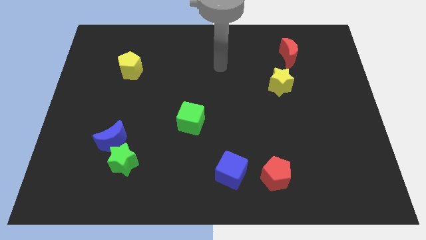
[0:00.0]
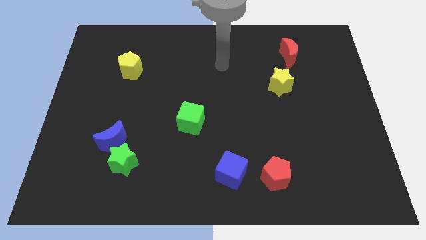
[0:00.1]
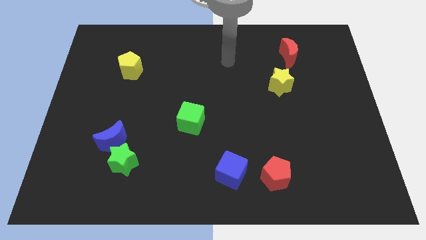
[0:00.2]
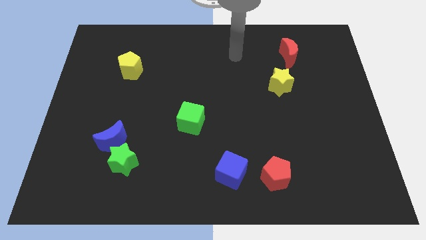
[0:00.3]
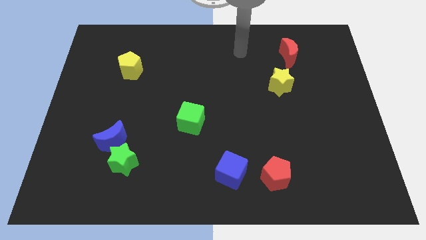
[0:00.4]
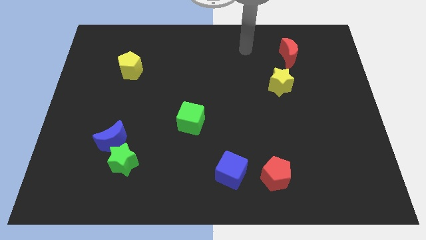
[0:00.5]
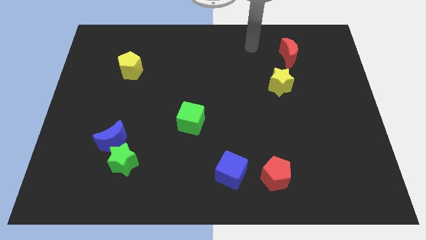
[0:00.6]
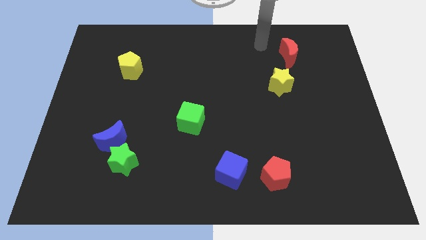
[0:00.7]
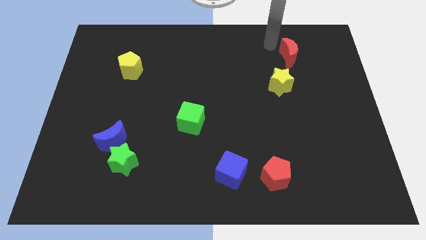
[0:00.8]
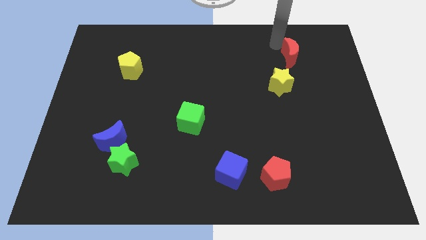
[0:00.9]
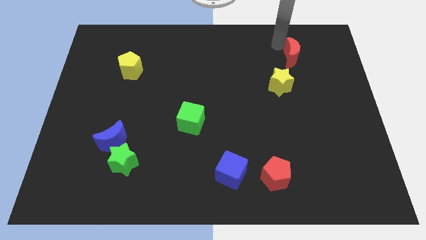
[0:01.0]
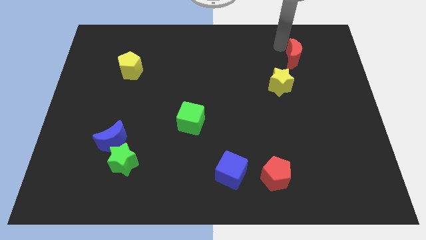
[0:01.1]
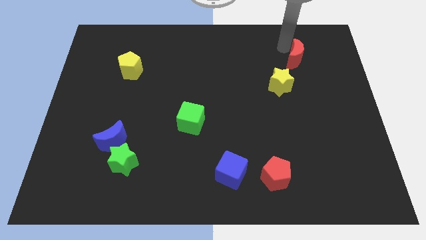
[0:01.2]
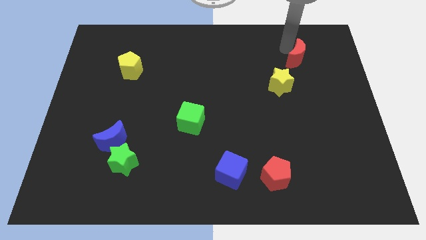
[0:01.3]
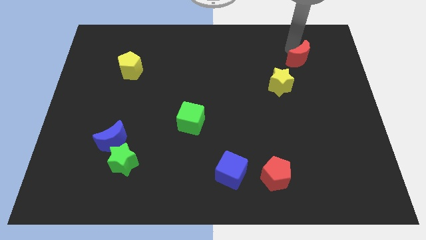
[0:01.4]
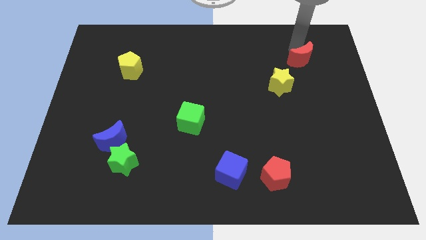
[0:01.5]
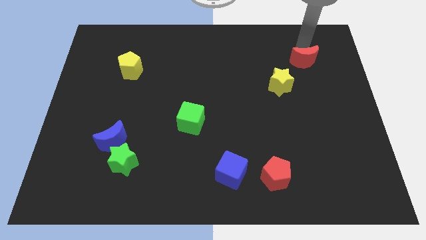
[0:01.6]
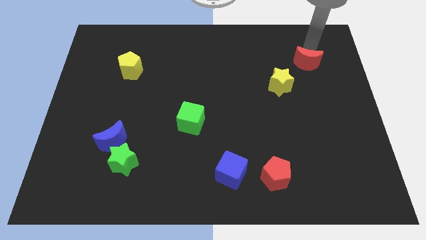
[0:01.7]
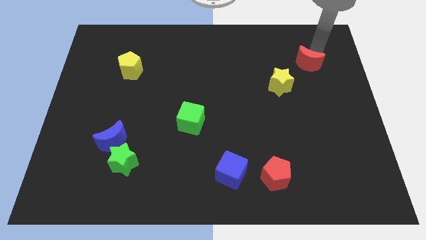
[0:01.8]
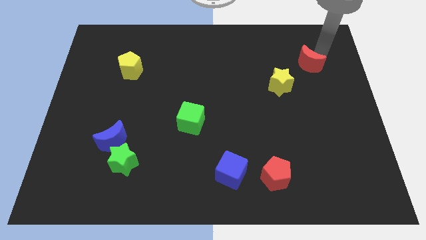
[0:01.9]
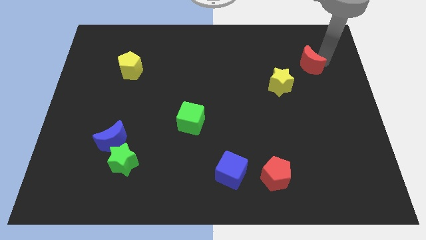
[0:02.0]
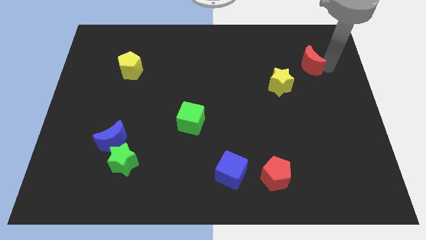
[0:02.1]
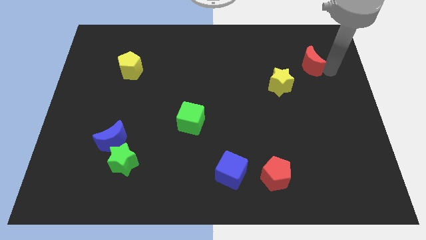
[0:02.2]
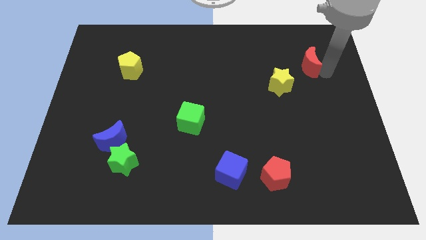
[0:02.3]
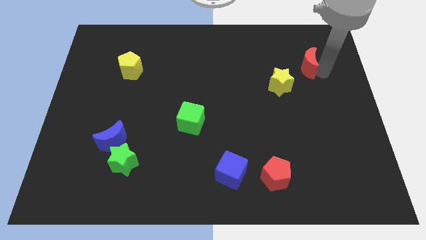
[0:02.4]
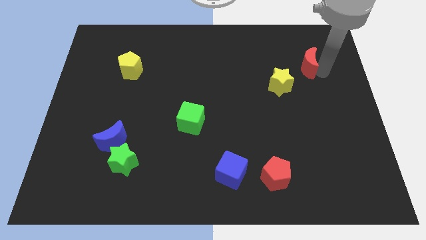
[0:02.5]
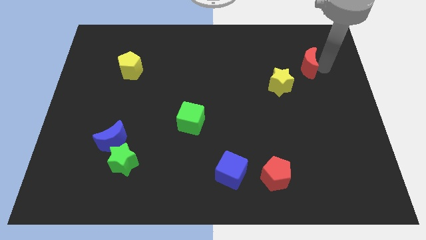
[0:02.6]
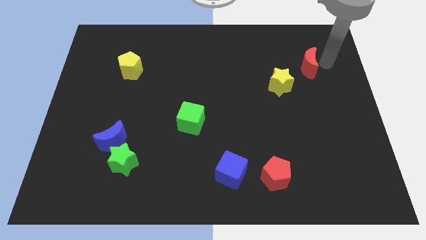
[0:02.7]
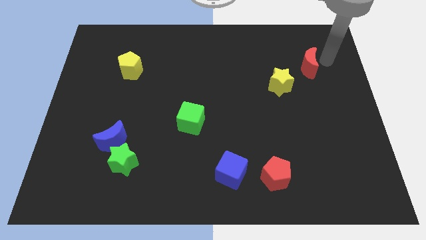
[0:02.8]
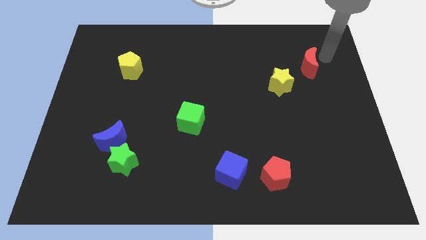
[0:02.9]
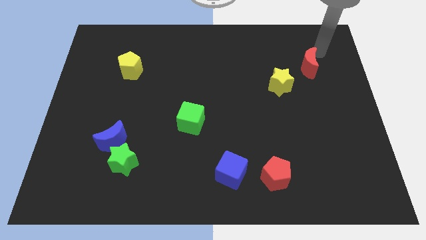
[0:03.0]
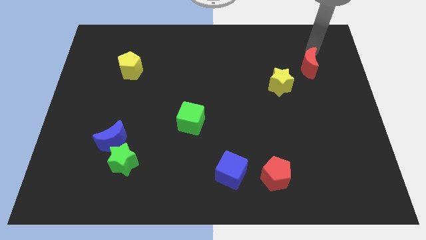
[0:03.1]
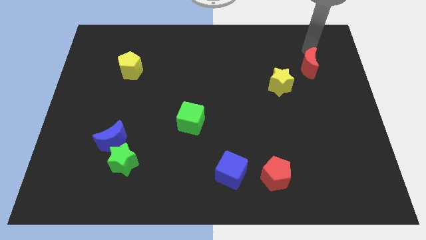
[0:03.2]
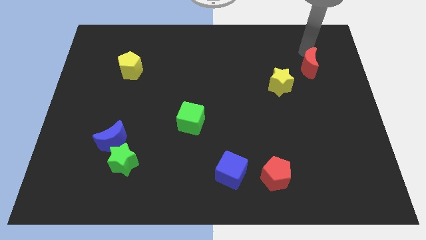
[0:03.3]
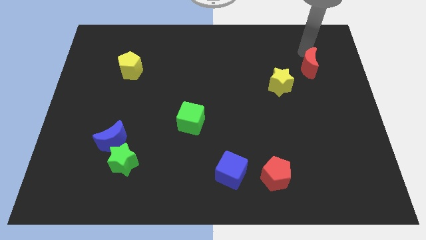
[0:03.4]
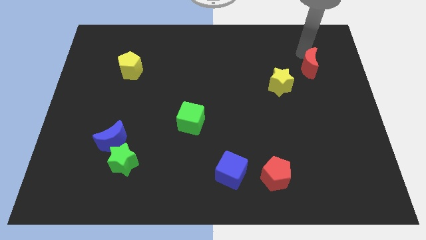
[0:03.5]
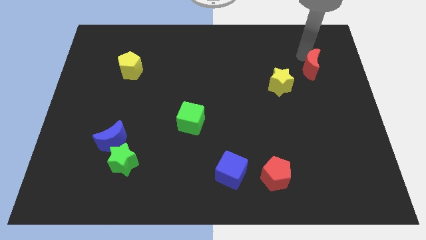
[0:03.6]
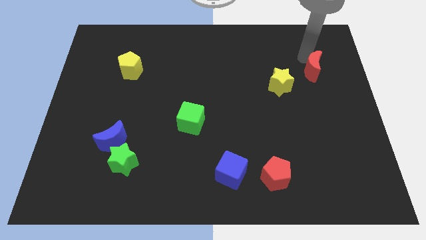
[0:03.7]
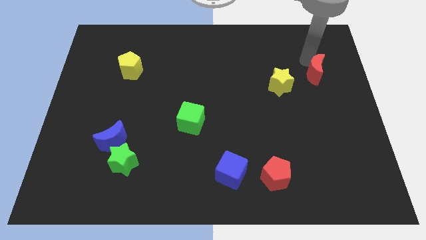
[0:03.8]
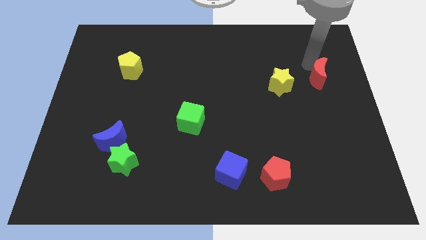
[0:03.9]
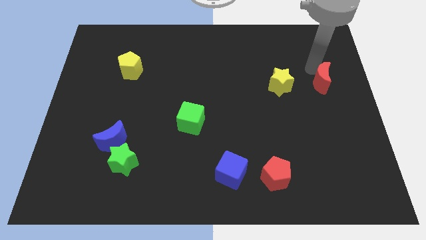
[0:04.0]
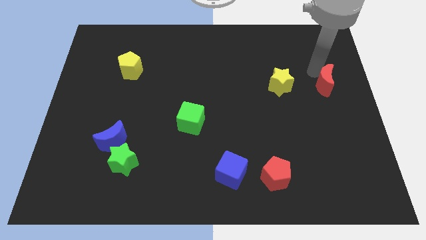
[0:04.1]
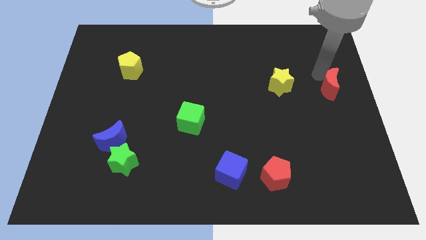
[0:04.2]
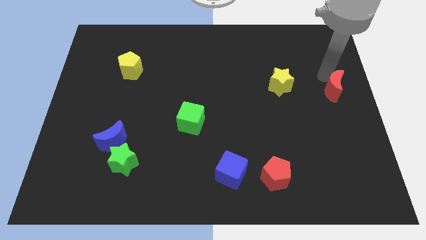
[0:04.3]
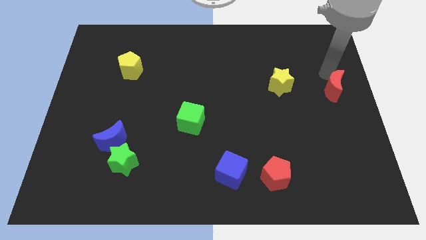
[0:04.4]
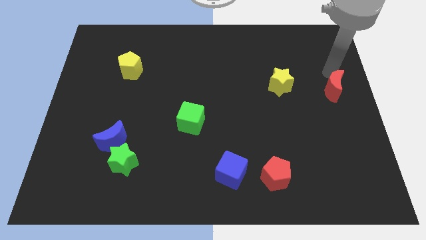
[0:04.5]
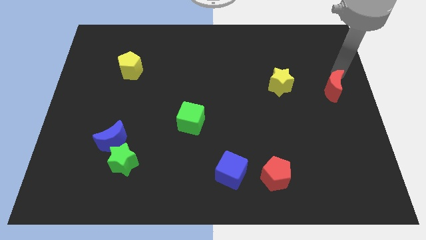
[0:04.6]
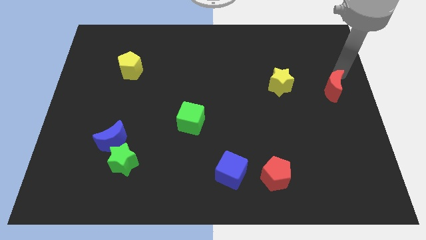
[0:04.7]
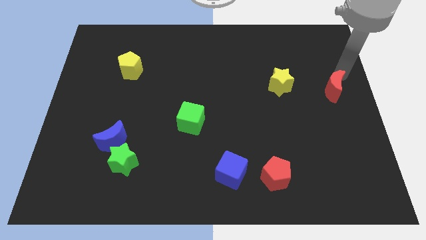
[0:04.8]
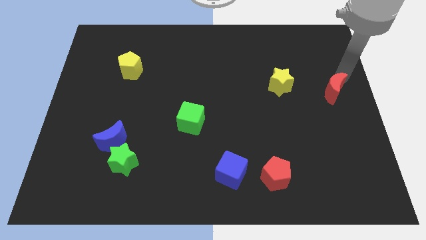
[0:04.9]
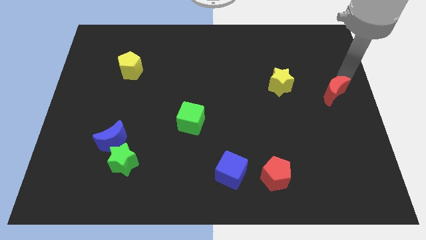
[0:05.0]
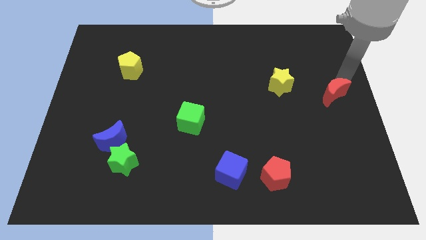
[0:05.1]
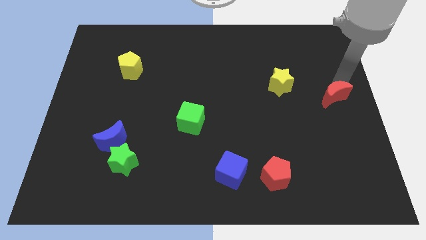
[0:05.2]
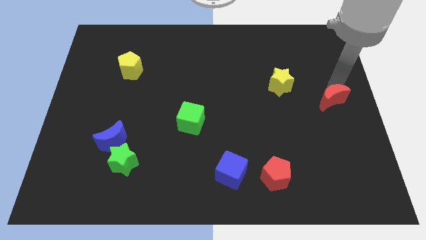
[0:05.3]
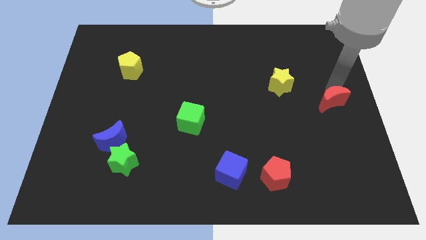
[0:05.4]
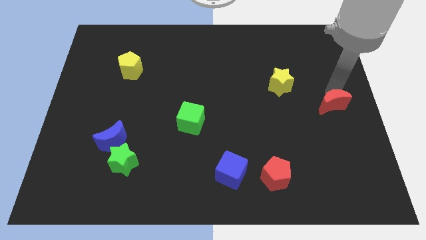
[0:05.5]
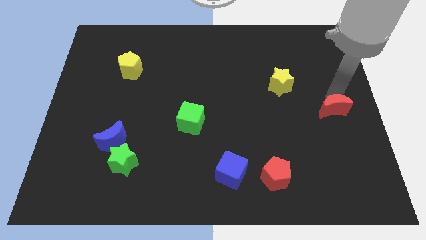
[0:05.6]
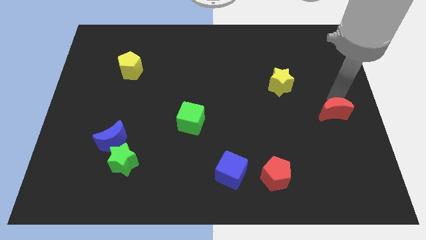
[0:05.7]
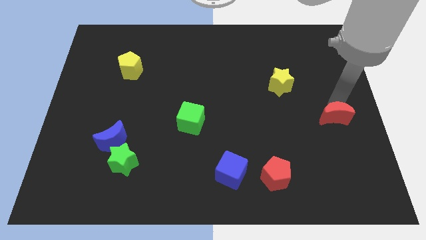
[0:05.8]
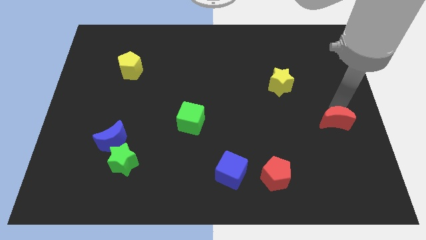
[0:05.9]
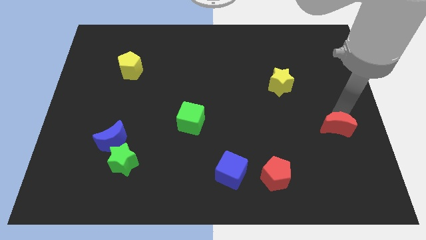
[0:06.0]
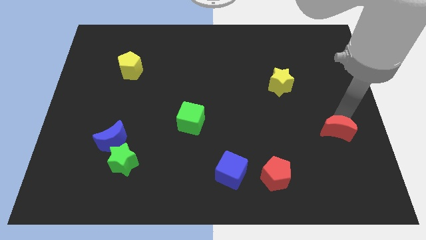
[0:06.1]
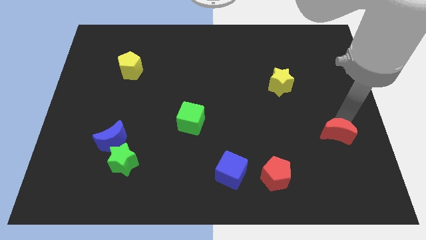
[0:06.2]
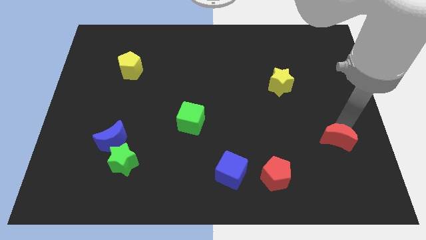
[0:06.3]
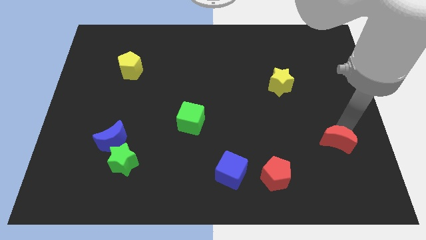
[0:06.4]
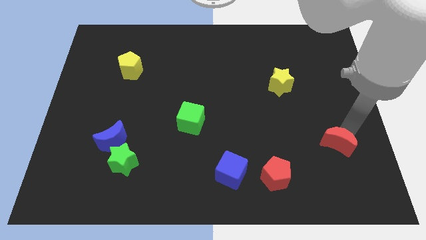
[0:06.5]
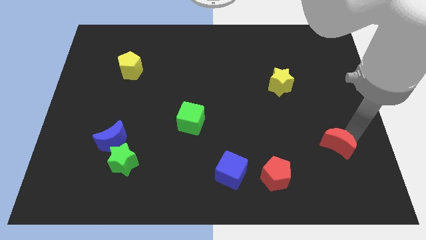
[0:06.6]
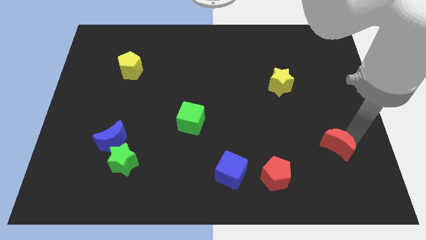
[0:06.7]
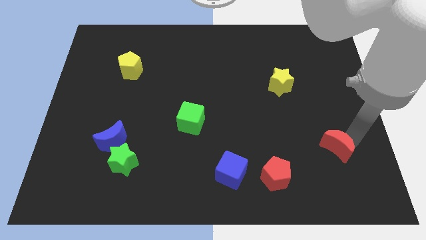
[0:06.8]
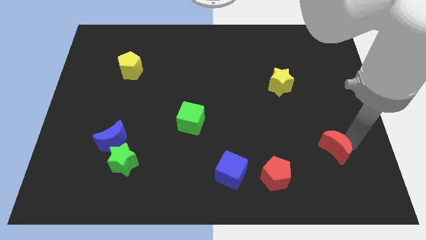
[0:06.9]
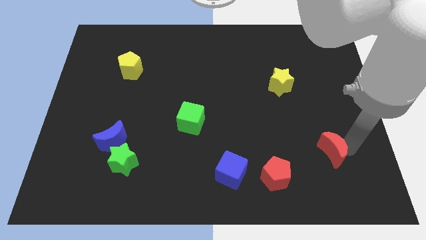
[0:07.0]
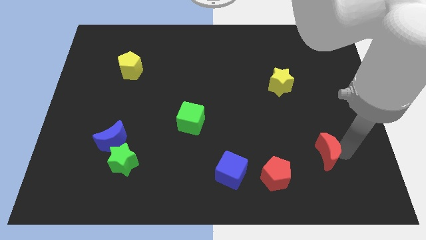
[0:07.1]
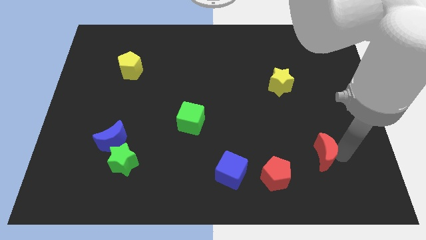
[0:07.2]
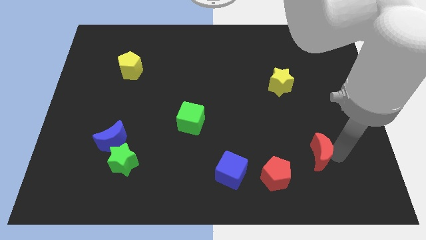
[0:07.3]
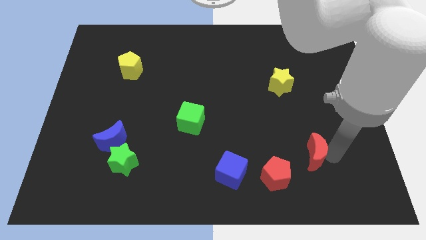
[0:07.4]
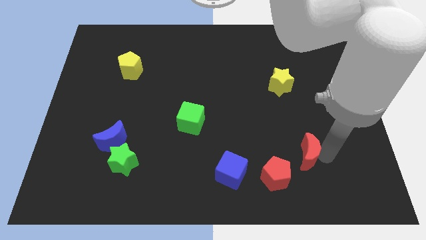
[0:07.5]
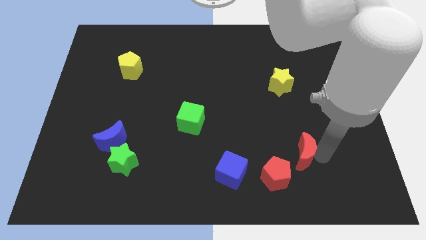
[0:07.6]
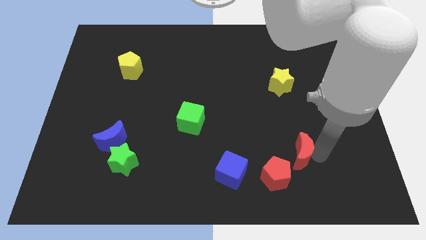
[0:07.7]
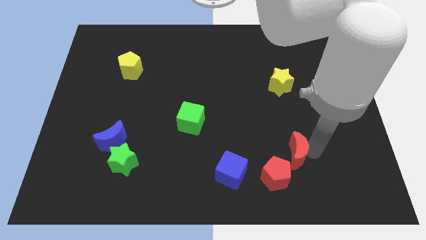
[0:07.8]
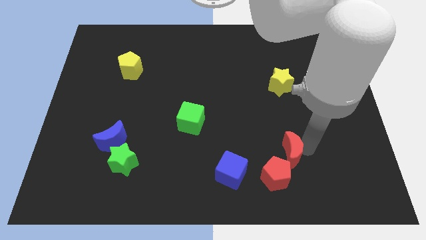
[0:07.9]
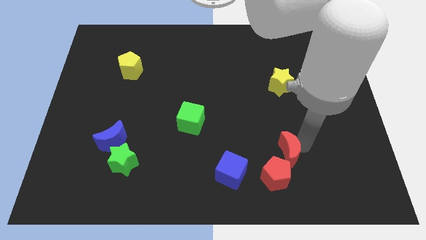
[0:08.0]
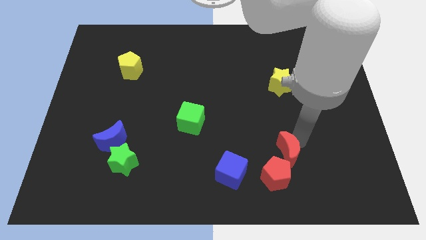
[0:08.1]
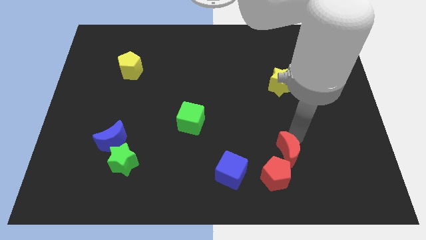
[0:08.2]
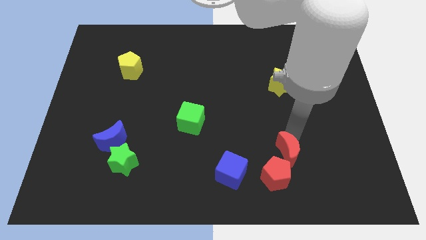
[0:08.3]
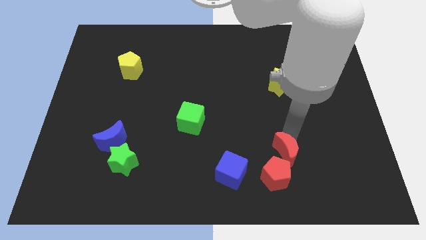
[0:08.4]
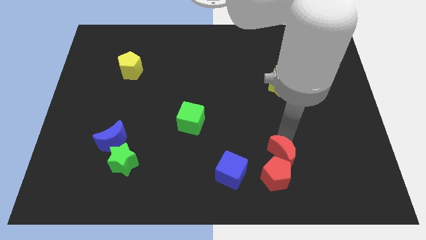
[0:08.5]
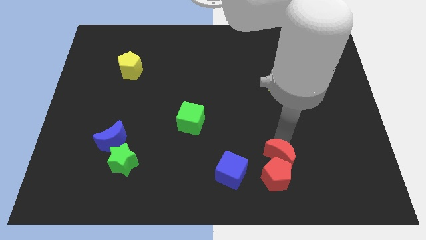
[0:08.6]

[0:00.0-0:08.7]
slide the red moon to the red pentagon
